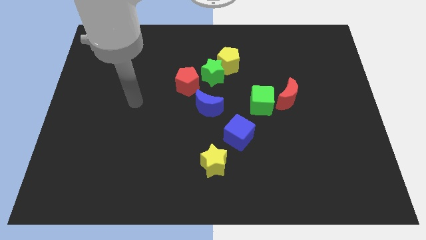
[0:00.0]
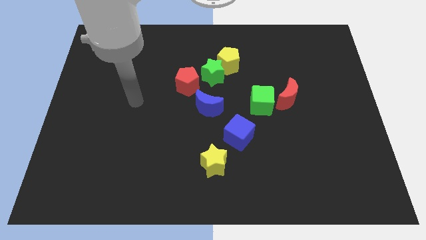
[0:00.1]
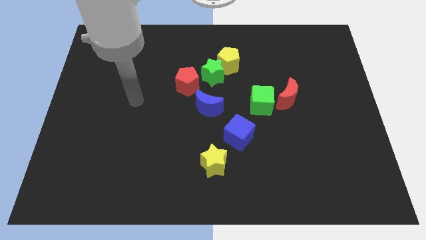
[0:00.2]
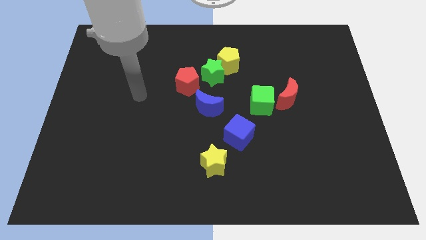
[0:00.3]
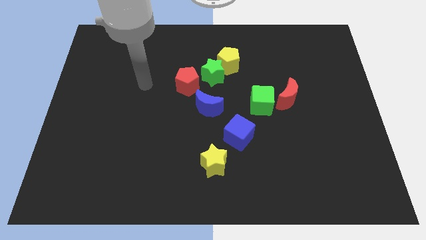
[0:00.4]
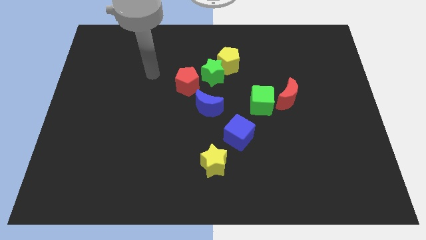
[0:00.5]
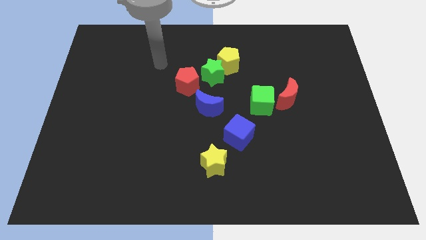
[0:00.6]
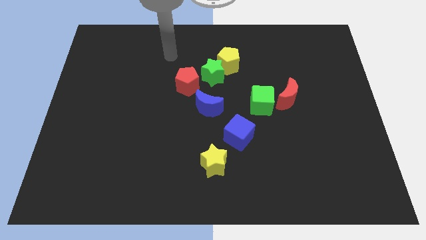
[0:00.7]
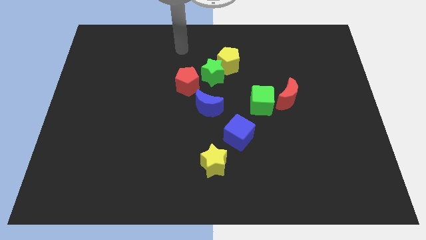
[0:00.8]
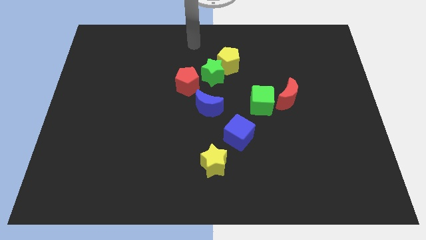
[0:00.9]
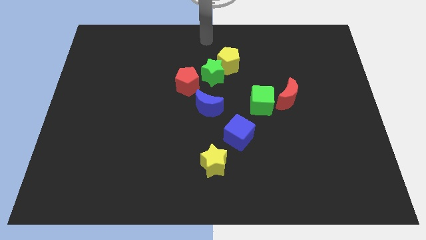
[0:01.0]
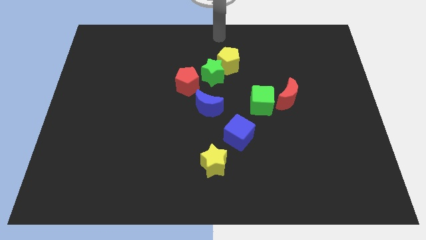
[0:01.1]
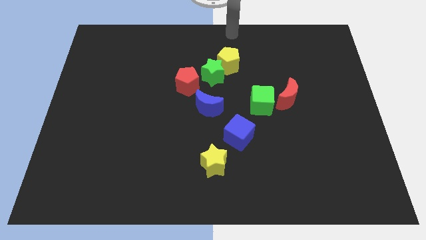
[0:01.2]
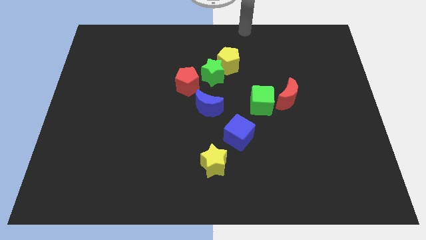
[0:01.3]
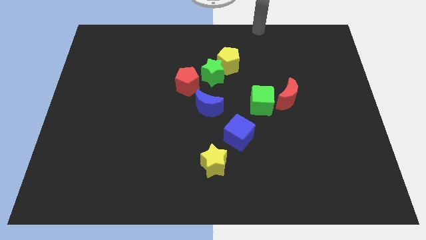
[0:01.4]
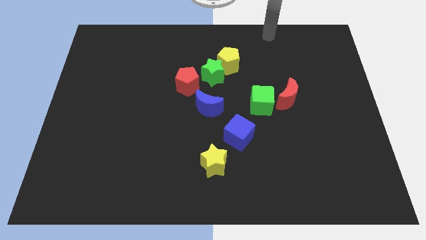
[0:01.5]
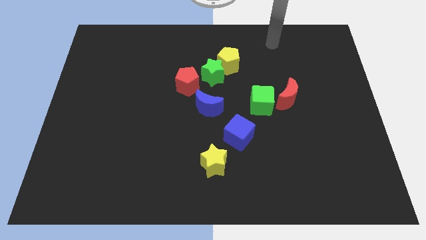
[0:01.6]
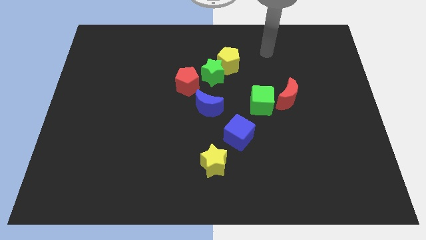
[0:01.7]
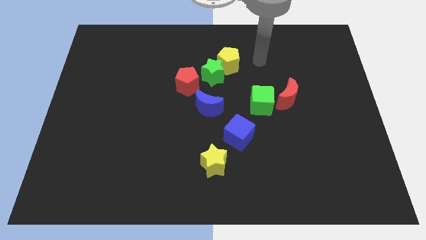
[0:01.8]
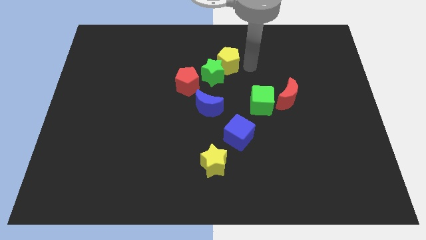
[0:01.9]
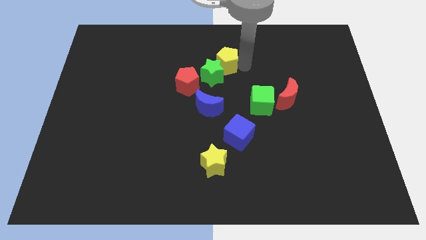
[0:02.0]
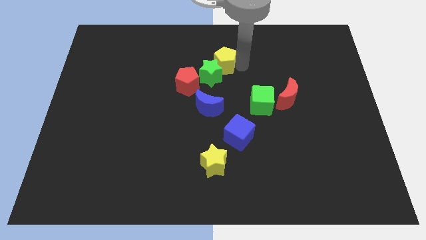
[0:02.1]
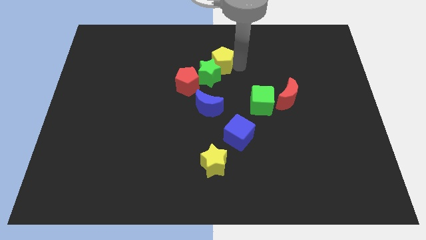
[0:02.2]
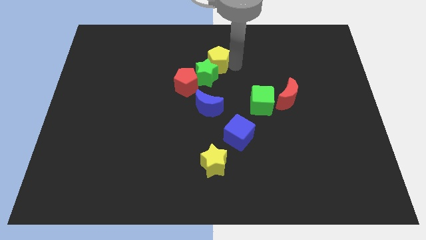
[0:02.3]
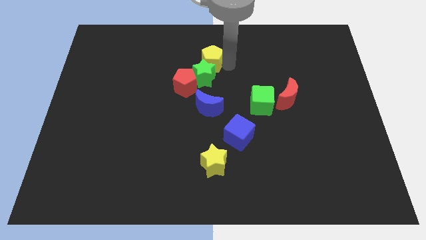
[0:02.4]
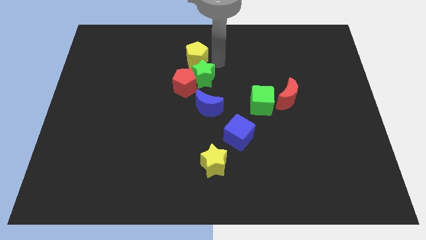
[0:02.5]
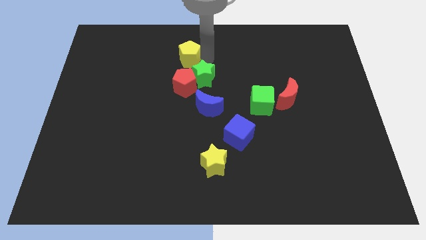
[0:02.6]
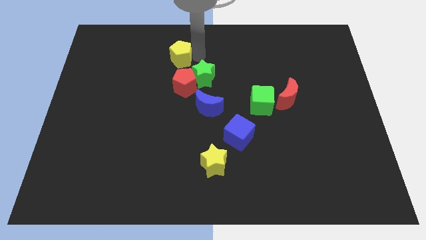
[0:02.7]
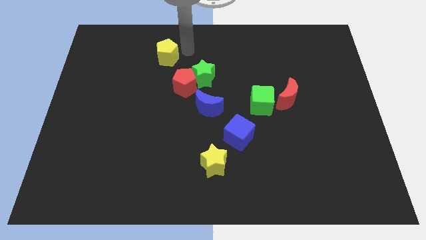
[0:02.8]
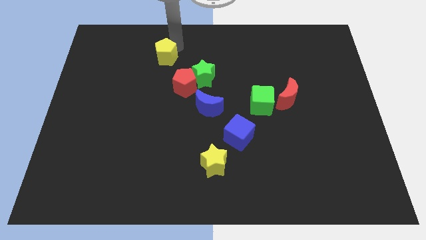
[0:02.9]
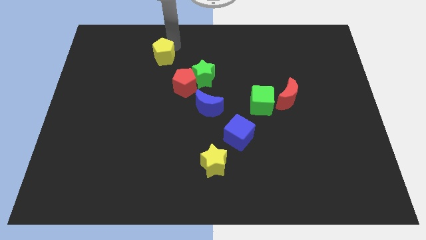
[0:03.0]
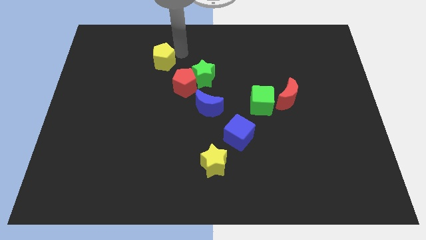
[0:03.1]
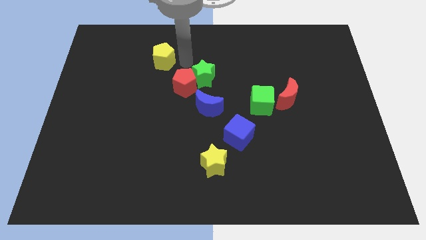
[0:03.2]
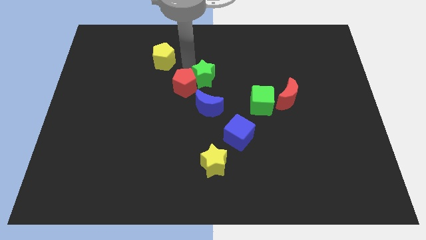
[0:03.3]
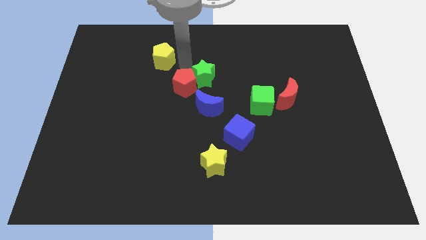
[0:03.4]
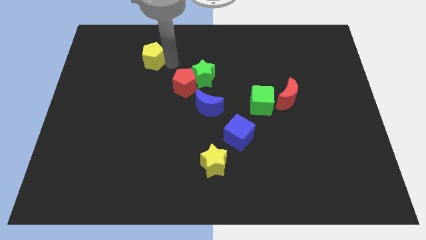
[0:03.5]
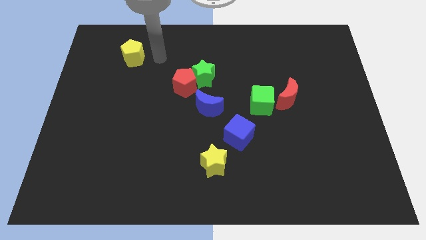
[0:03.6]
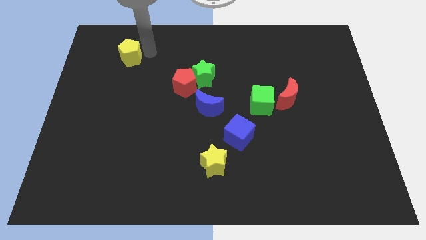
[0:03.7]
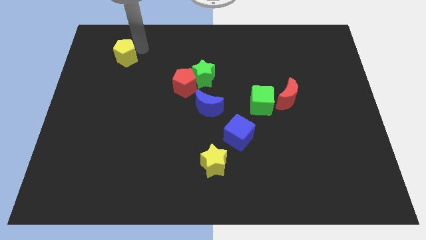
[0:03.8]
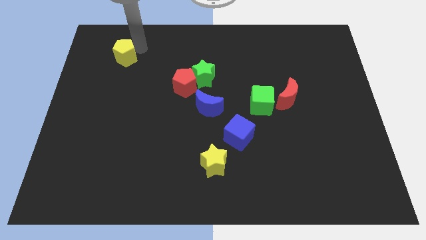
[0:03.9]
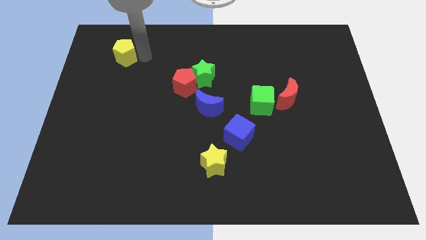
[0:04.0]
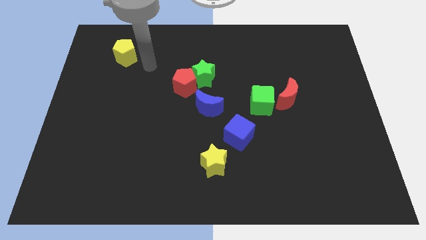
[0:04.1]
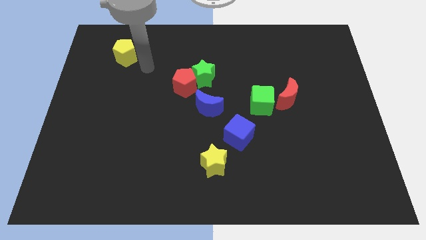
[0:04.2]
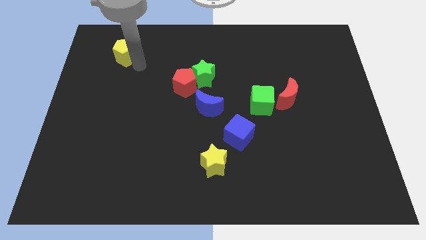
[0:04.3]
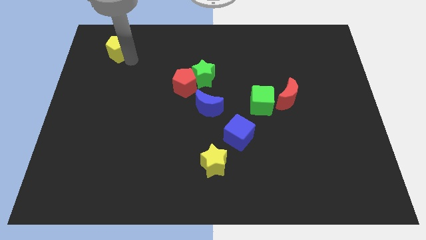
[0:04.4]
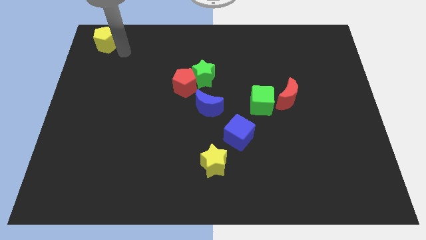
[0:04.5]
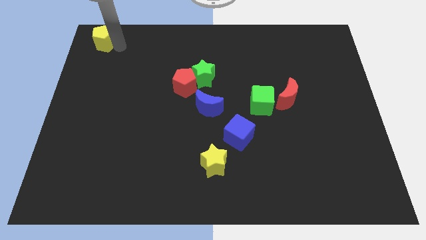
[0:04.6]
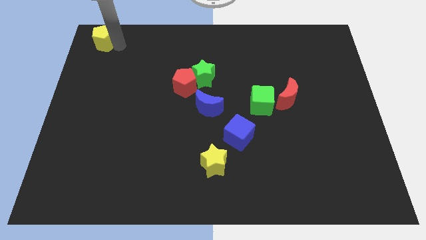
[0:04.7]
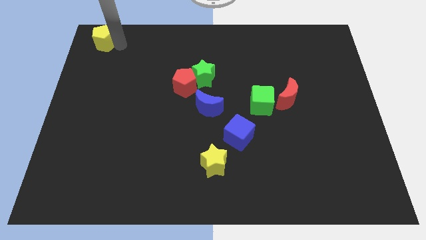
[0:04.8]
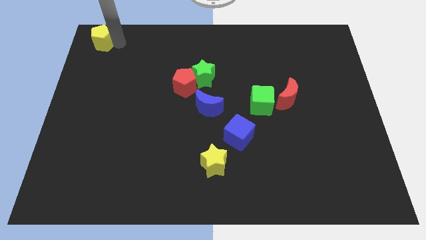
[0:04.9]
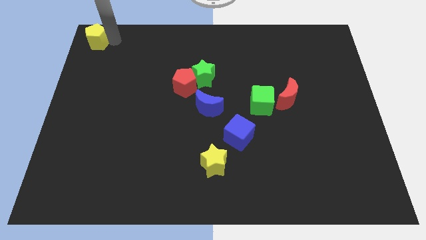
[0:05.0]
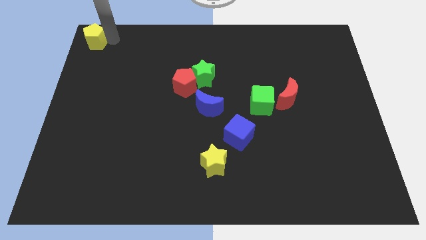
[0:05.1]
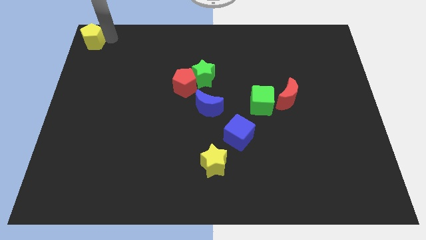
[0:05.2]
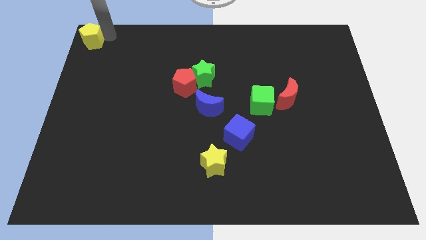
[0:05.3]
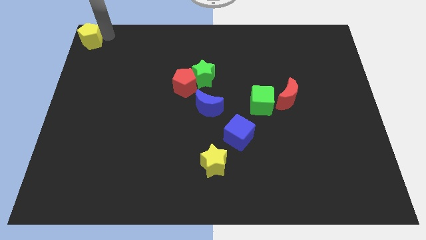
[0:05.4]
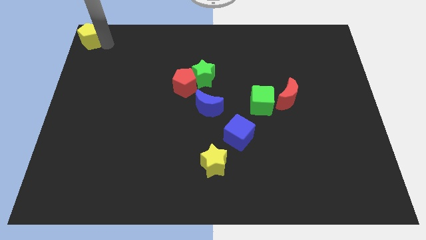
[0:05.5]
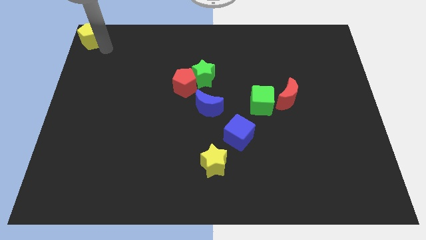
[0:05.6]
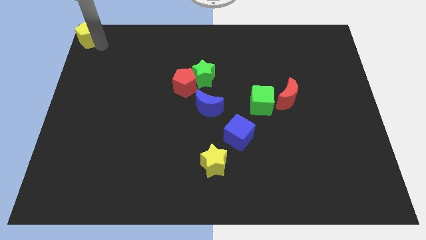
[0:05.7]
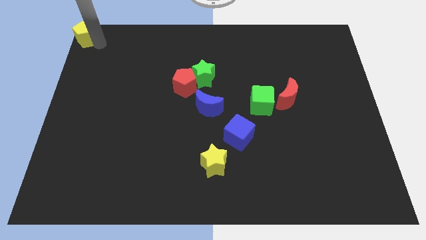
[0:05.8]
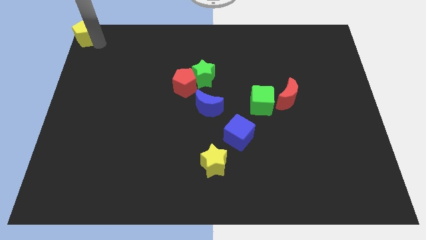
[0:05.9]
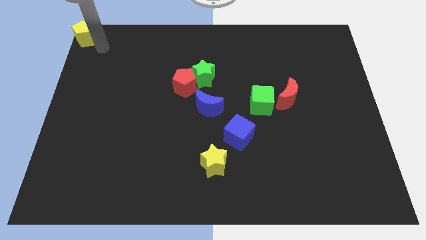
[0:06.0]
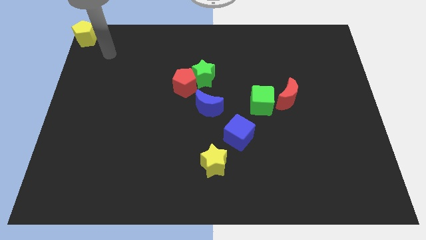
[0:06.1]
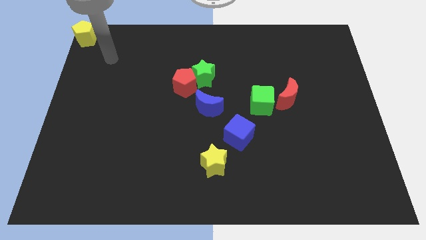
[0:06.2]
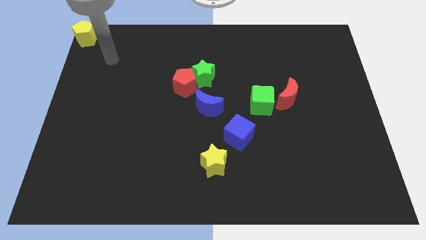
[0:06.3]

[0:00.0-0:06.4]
slide the yellow pentagon to the top left of the board

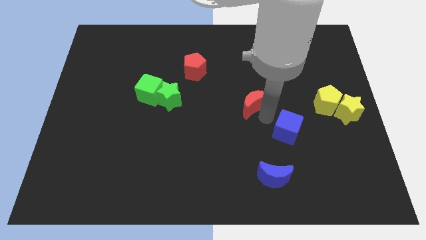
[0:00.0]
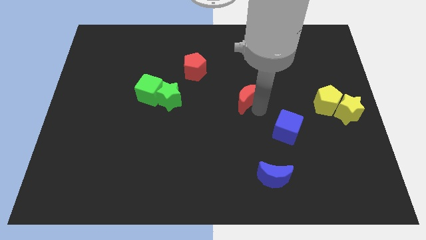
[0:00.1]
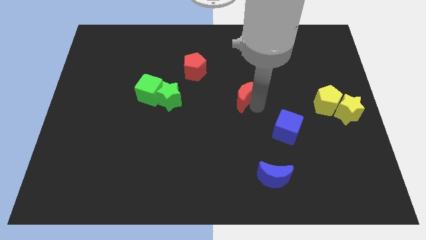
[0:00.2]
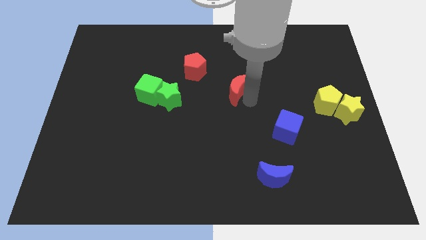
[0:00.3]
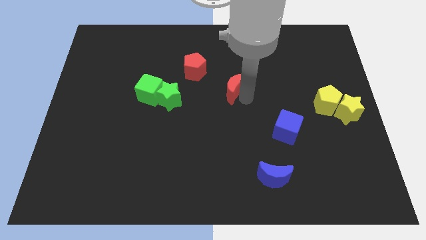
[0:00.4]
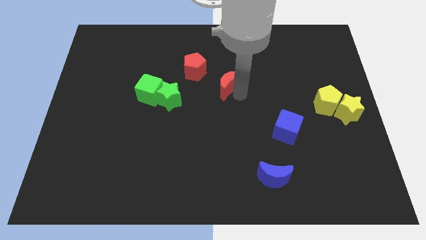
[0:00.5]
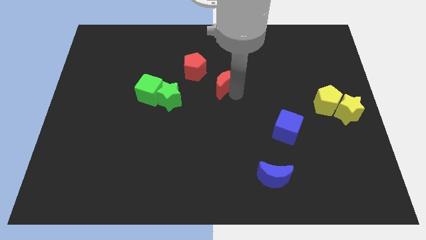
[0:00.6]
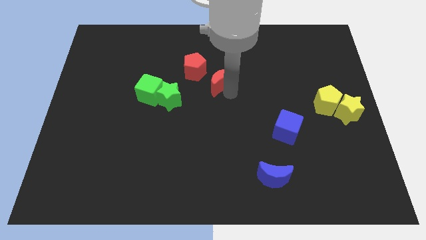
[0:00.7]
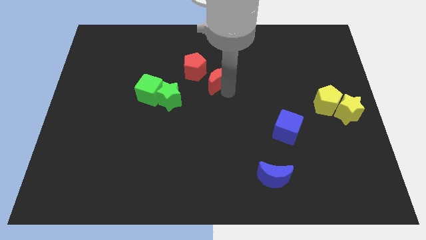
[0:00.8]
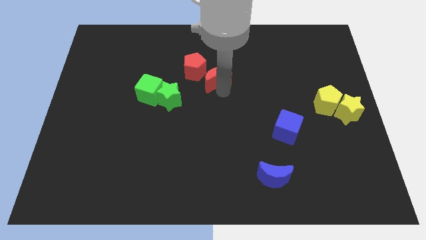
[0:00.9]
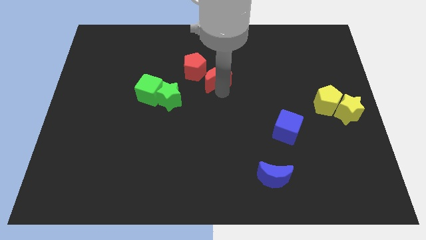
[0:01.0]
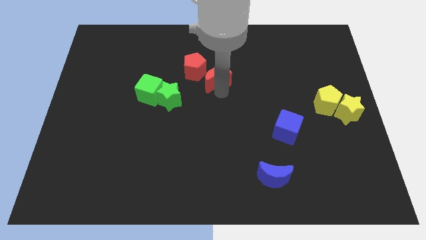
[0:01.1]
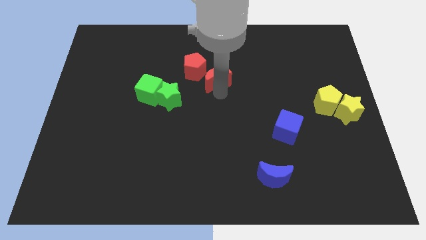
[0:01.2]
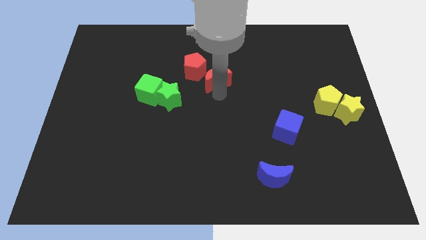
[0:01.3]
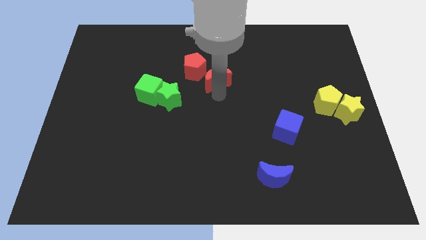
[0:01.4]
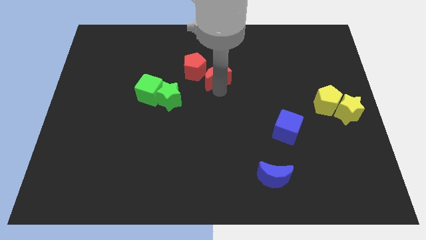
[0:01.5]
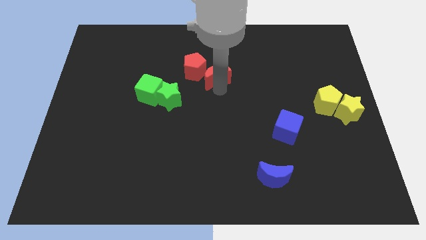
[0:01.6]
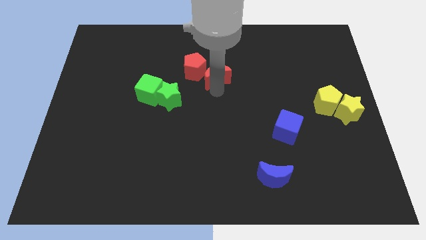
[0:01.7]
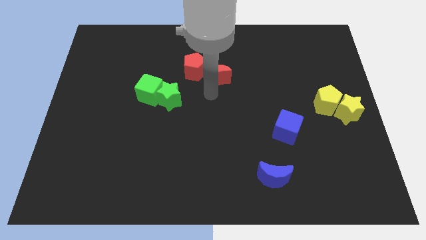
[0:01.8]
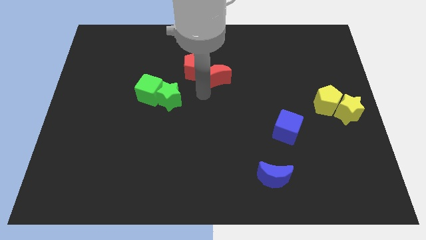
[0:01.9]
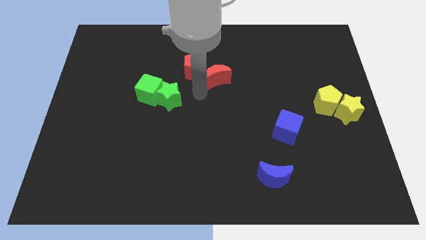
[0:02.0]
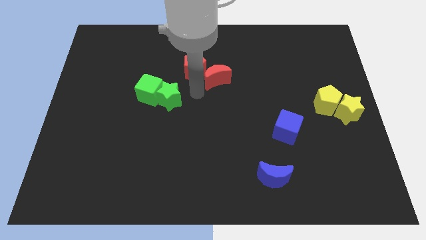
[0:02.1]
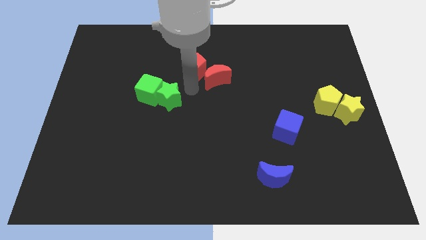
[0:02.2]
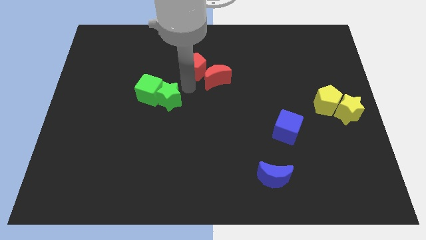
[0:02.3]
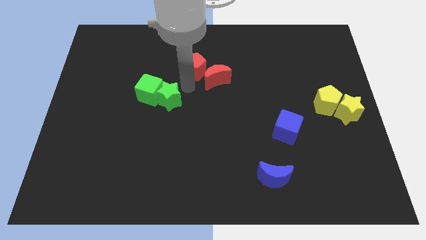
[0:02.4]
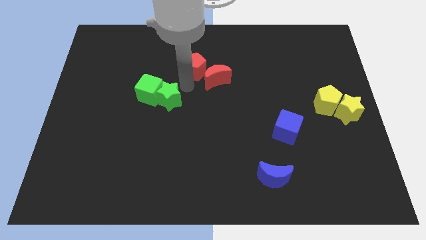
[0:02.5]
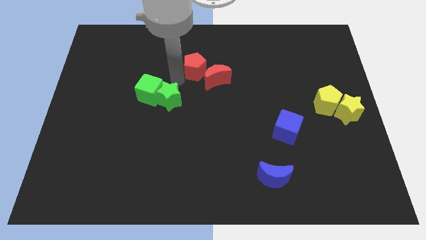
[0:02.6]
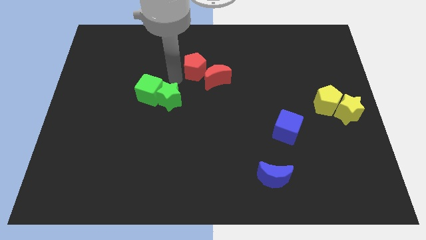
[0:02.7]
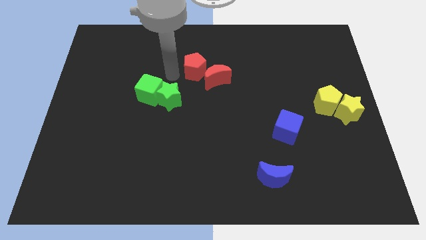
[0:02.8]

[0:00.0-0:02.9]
push the red crescent to the right of the red pentagon
